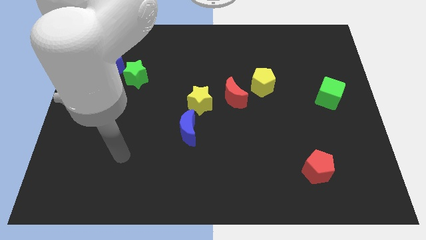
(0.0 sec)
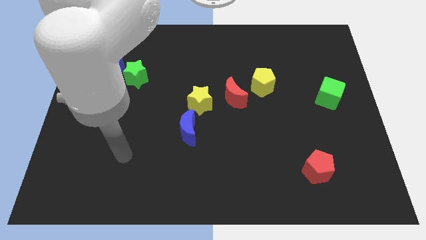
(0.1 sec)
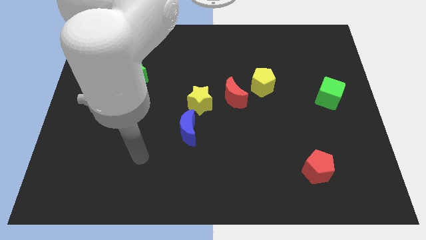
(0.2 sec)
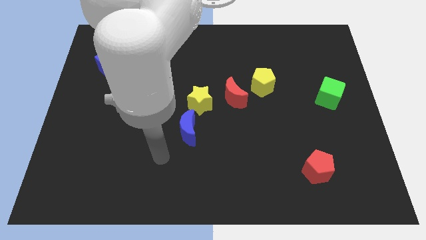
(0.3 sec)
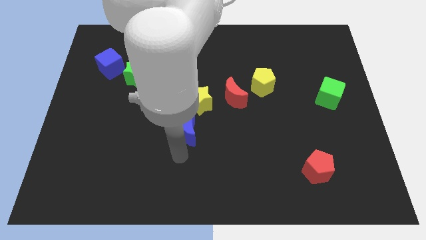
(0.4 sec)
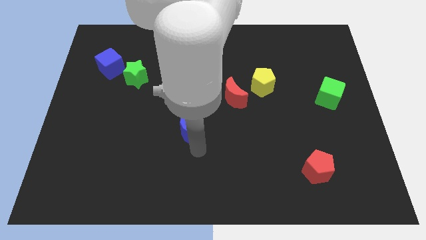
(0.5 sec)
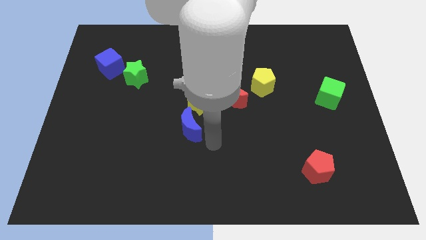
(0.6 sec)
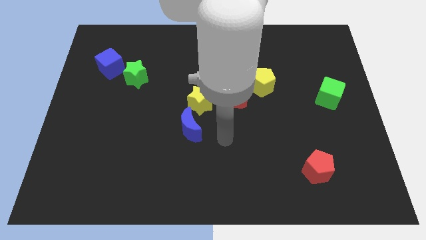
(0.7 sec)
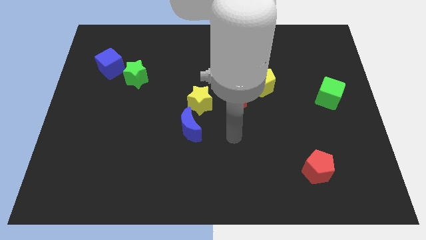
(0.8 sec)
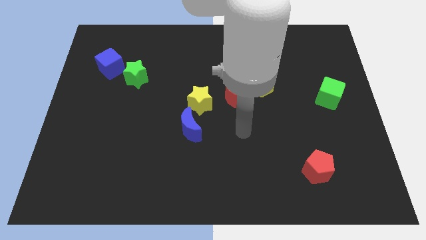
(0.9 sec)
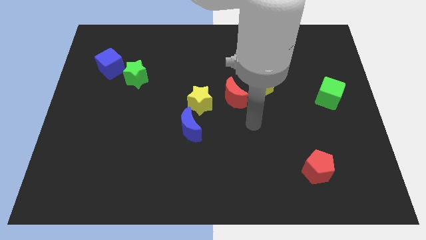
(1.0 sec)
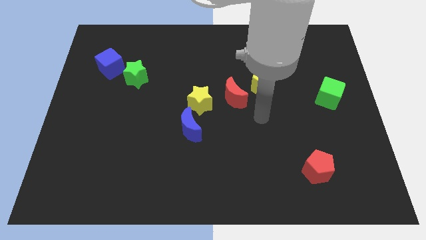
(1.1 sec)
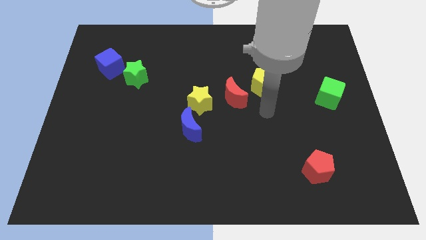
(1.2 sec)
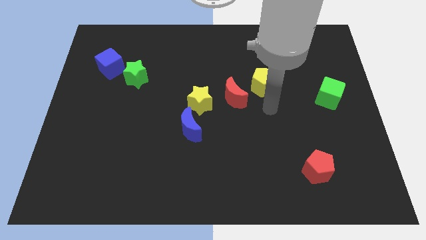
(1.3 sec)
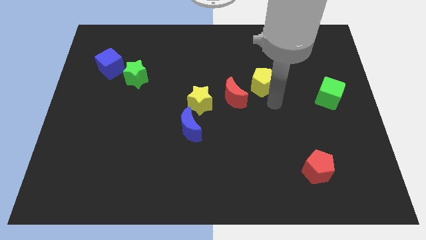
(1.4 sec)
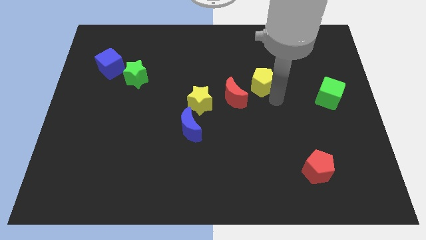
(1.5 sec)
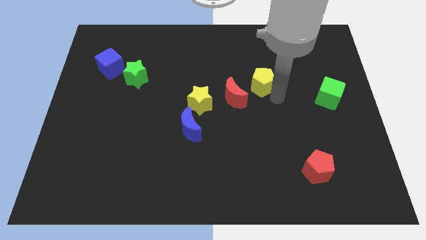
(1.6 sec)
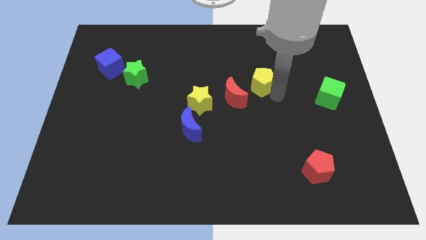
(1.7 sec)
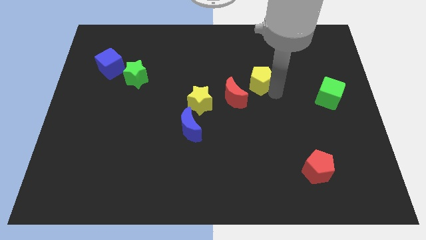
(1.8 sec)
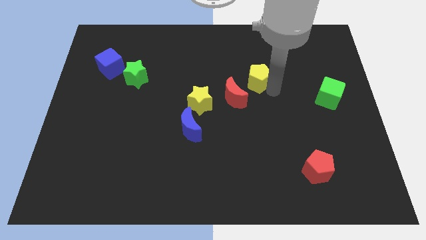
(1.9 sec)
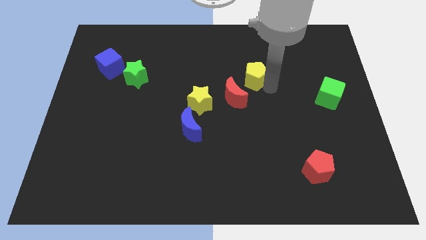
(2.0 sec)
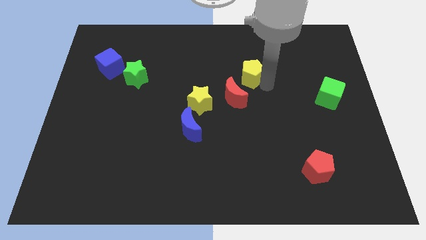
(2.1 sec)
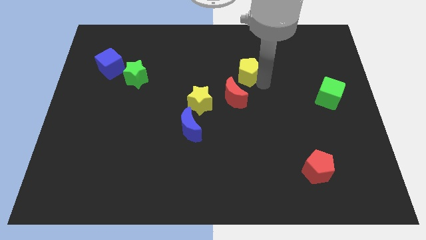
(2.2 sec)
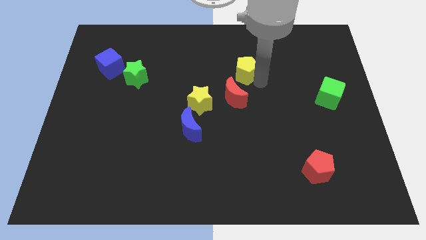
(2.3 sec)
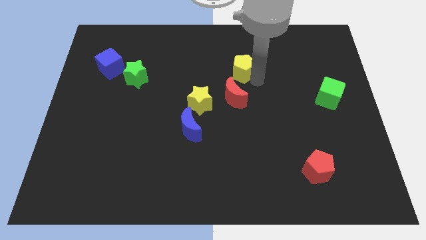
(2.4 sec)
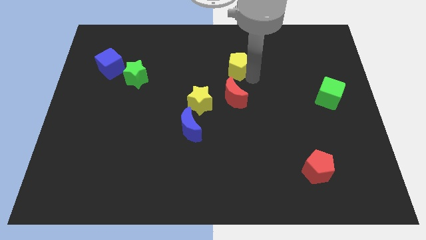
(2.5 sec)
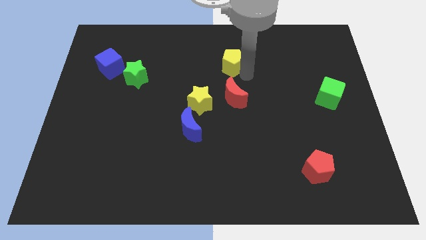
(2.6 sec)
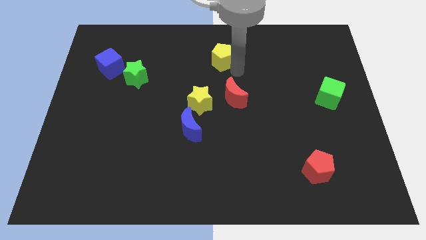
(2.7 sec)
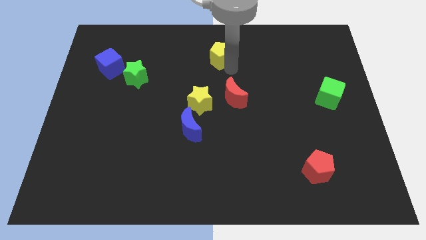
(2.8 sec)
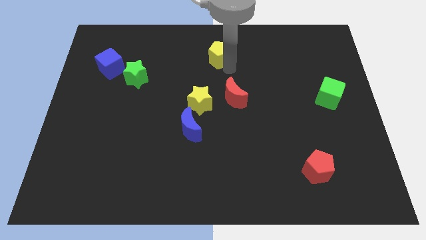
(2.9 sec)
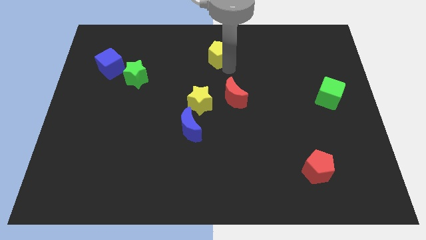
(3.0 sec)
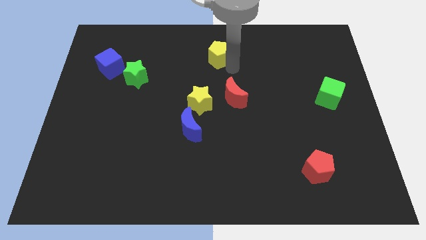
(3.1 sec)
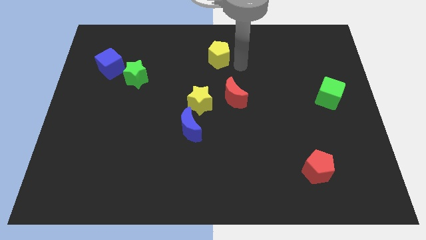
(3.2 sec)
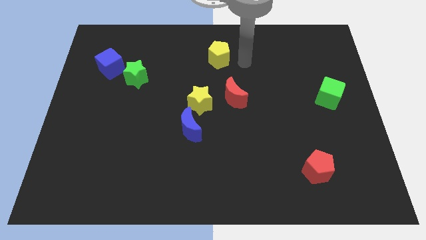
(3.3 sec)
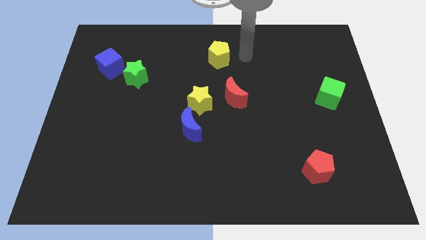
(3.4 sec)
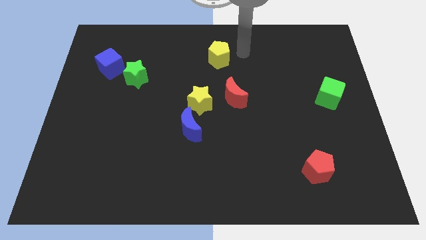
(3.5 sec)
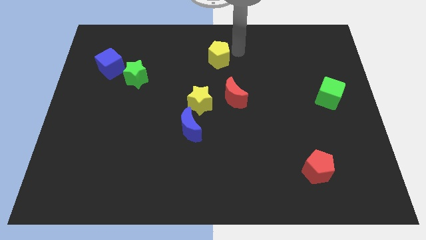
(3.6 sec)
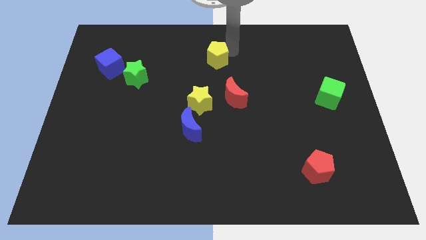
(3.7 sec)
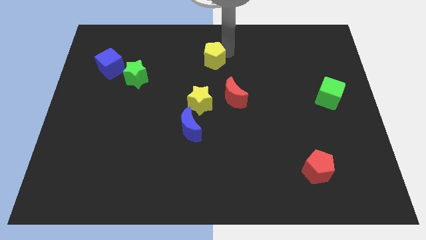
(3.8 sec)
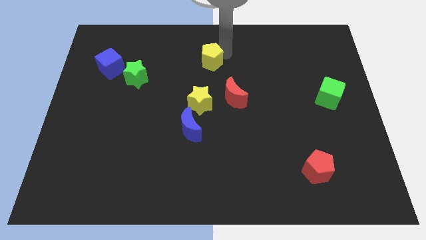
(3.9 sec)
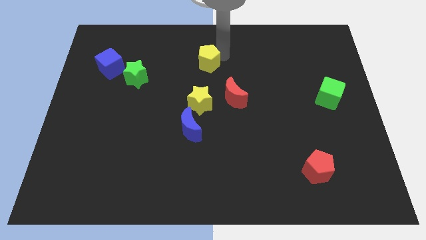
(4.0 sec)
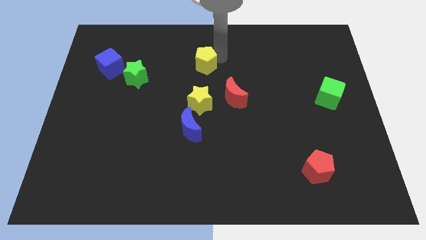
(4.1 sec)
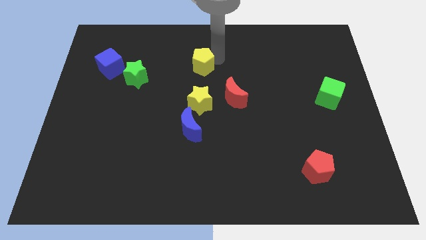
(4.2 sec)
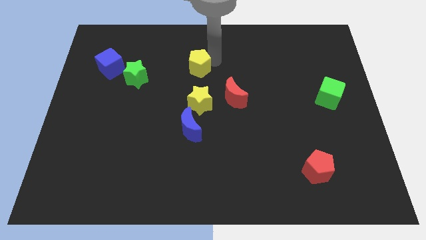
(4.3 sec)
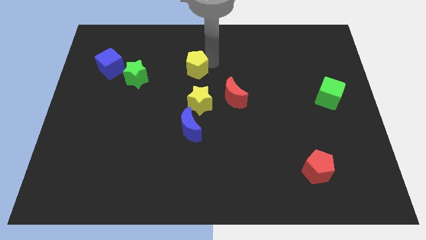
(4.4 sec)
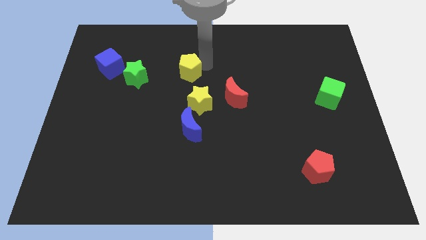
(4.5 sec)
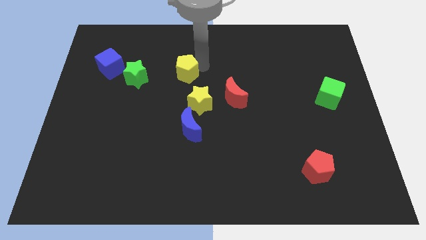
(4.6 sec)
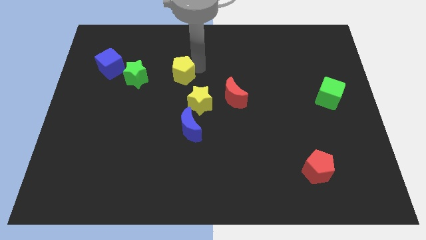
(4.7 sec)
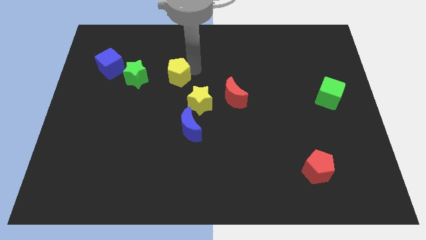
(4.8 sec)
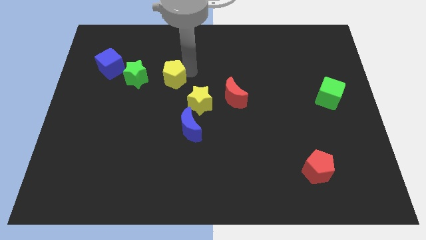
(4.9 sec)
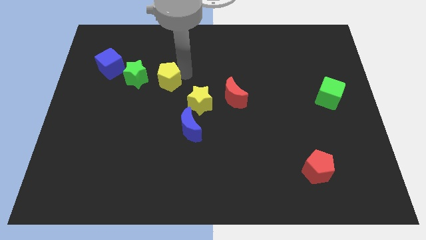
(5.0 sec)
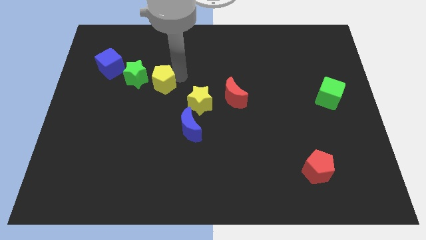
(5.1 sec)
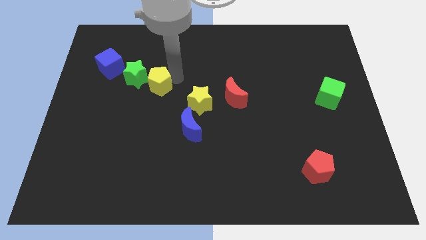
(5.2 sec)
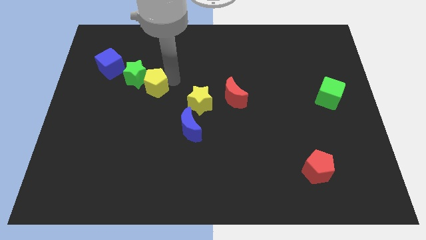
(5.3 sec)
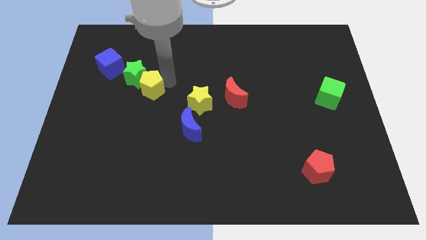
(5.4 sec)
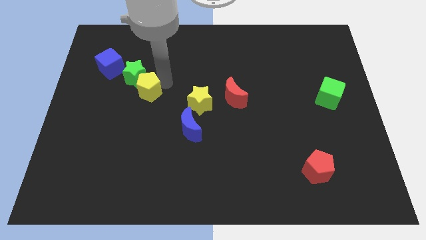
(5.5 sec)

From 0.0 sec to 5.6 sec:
move the yellow pentagon towards the green star

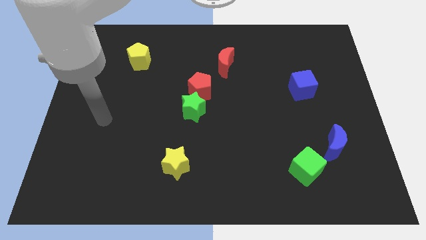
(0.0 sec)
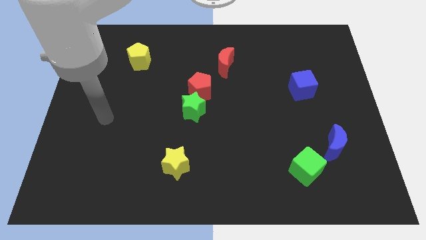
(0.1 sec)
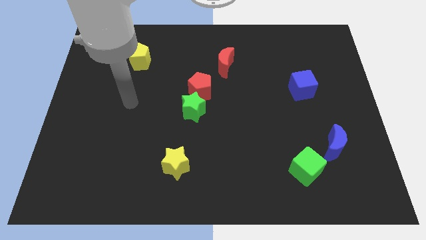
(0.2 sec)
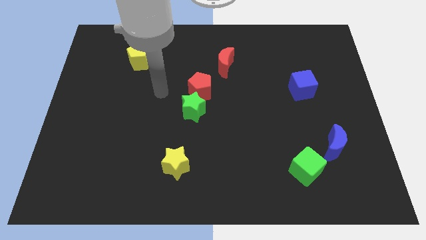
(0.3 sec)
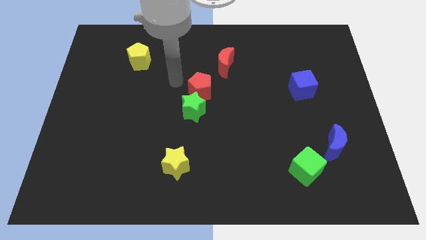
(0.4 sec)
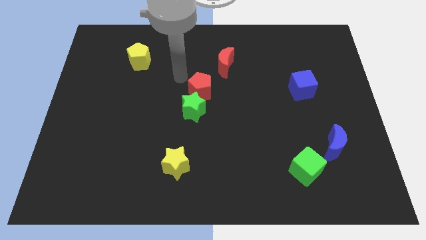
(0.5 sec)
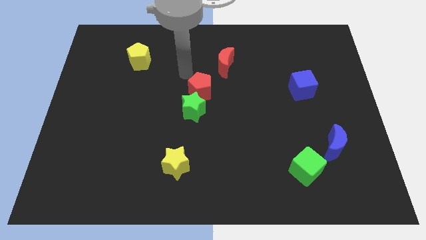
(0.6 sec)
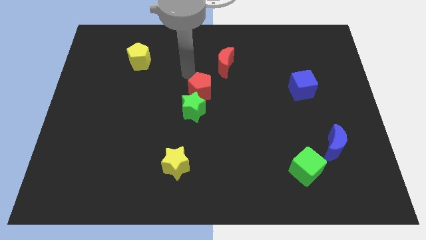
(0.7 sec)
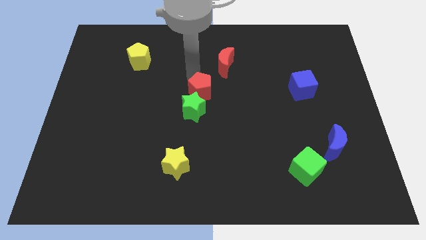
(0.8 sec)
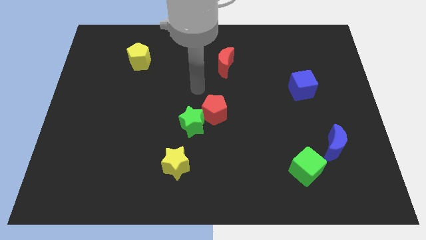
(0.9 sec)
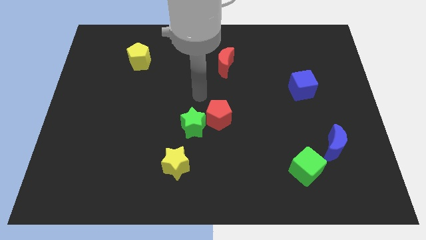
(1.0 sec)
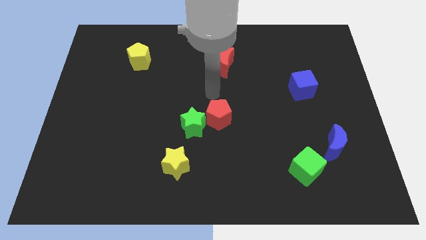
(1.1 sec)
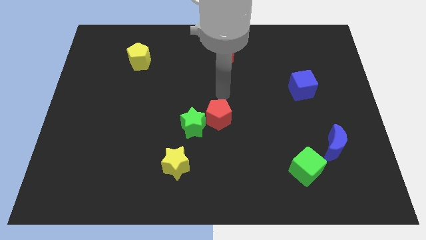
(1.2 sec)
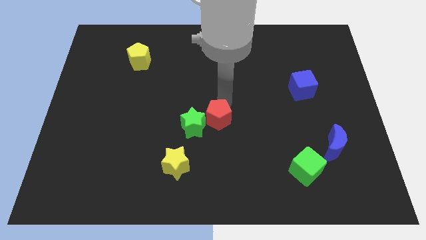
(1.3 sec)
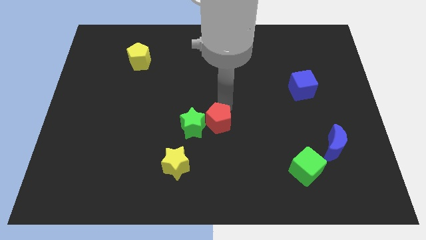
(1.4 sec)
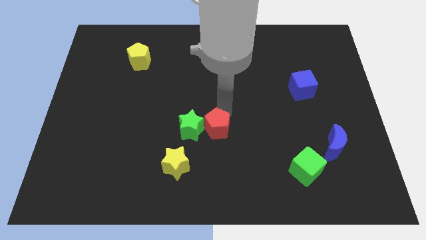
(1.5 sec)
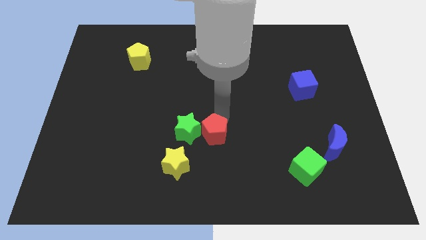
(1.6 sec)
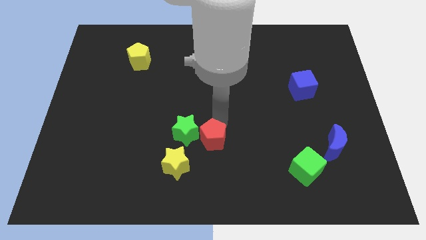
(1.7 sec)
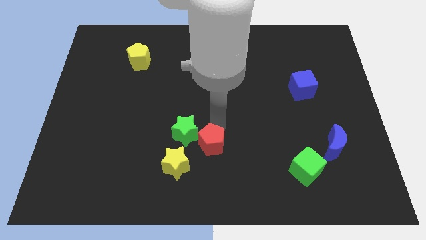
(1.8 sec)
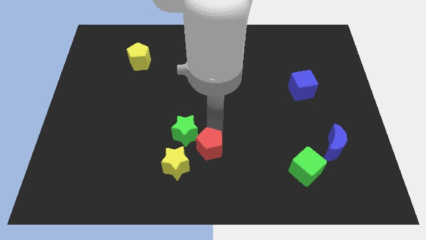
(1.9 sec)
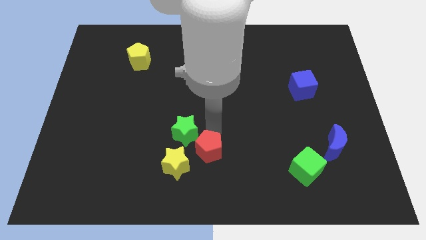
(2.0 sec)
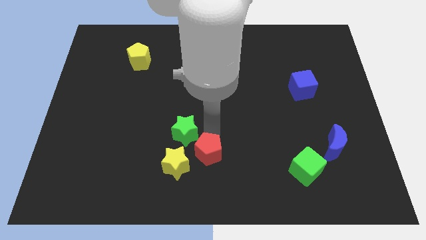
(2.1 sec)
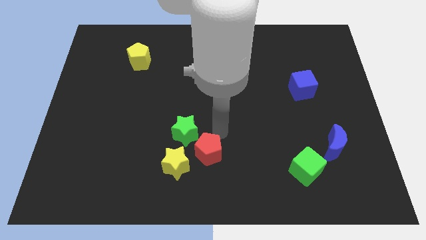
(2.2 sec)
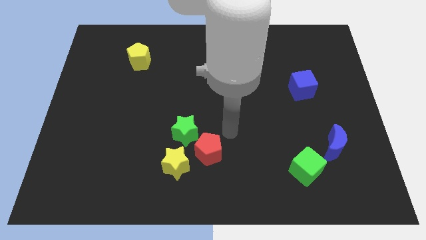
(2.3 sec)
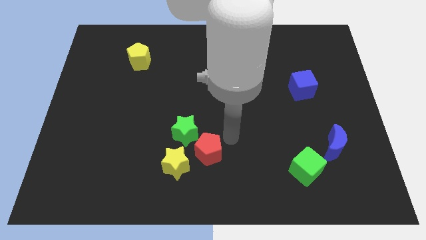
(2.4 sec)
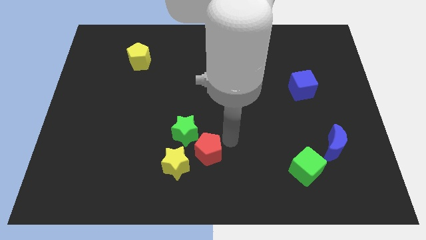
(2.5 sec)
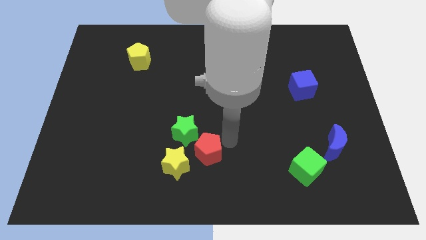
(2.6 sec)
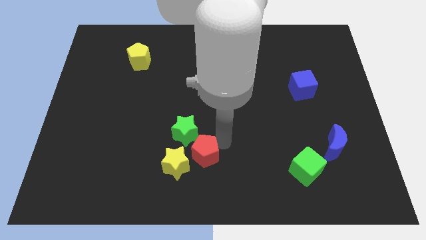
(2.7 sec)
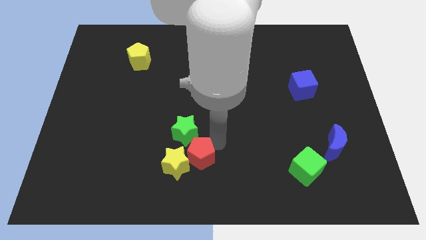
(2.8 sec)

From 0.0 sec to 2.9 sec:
push the red pentagon to the yellow star

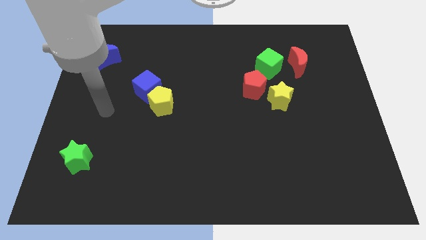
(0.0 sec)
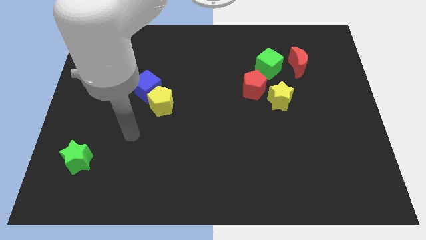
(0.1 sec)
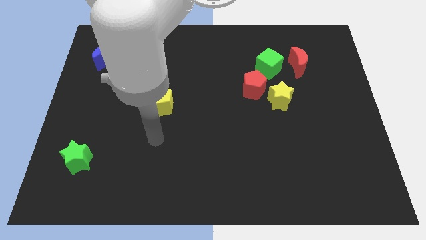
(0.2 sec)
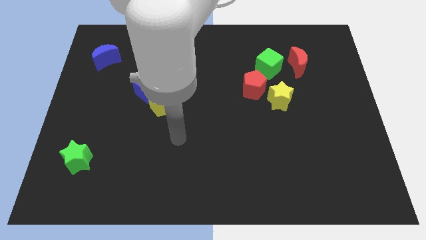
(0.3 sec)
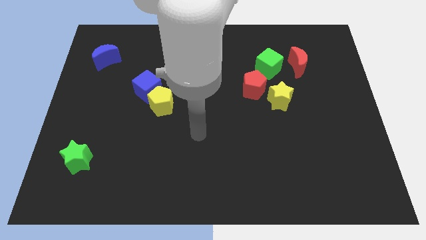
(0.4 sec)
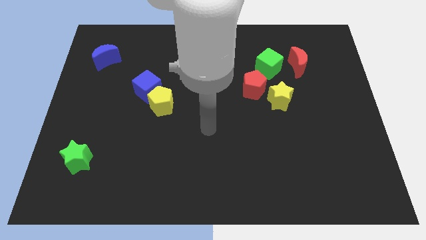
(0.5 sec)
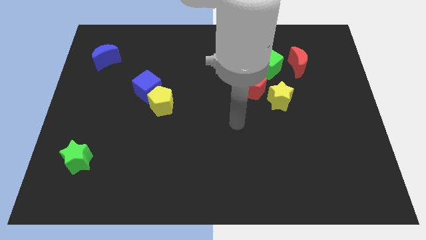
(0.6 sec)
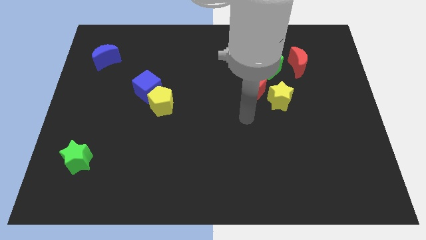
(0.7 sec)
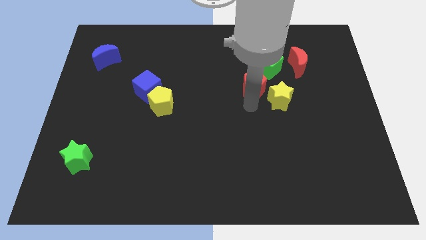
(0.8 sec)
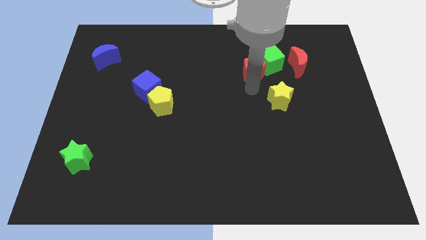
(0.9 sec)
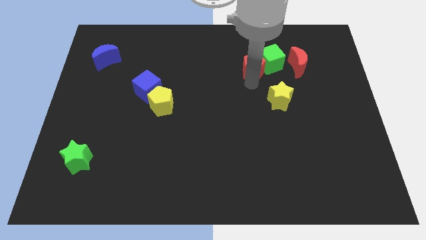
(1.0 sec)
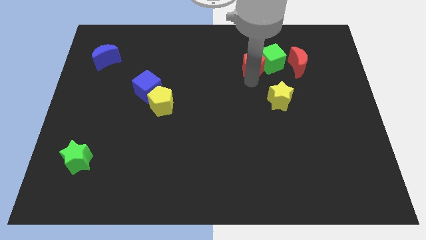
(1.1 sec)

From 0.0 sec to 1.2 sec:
slide the red pentagon towards the green cube
